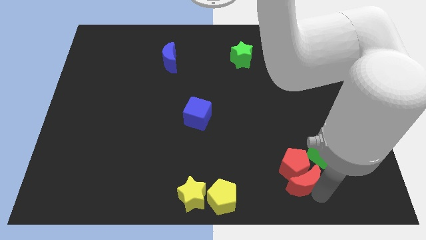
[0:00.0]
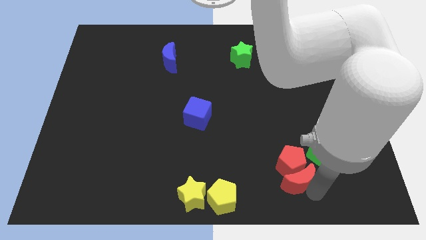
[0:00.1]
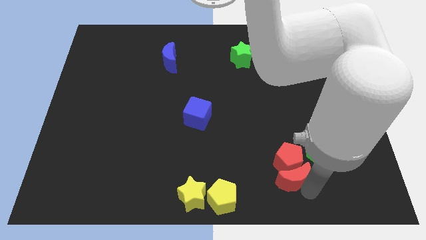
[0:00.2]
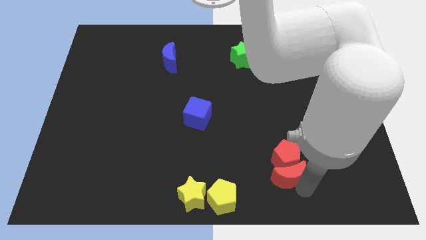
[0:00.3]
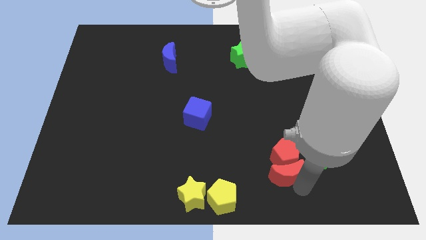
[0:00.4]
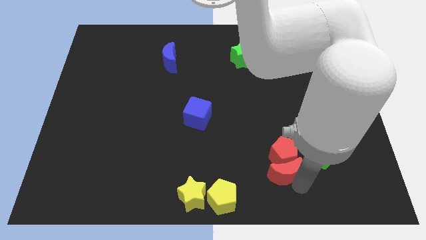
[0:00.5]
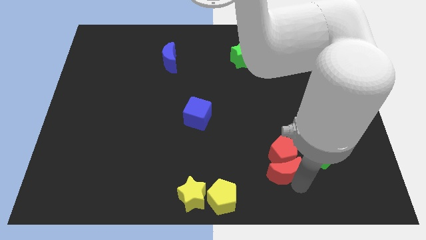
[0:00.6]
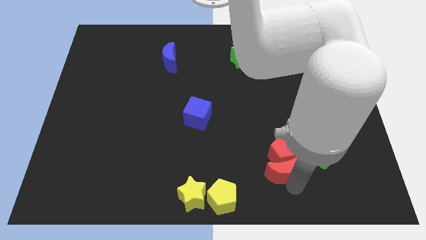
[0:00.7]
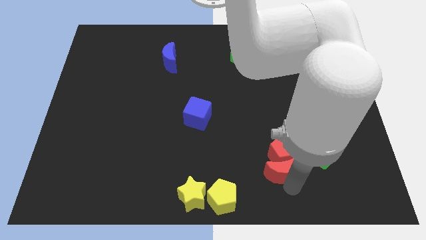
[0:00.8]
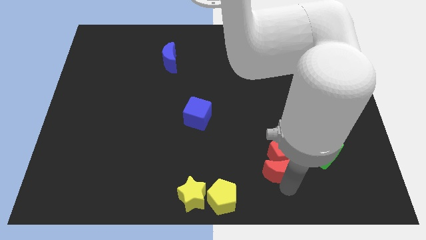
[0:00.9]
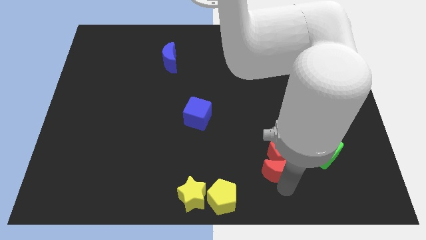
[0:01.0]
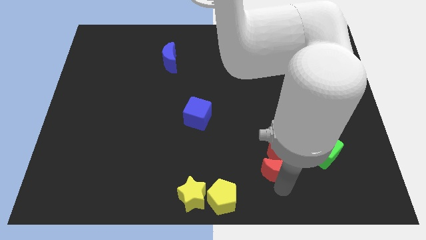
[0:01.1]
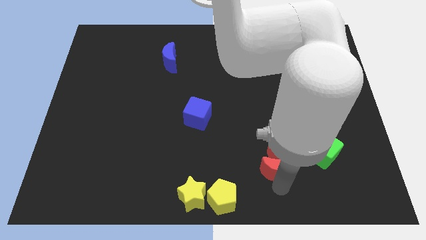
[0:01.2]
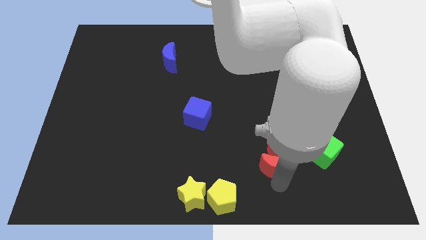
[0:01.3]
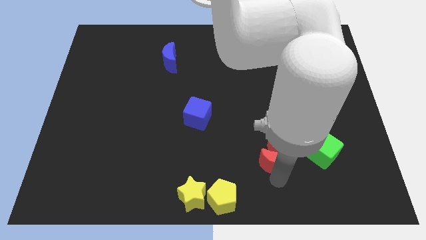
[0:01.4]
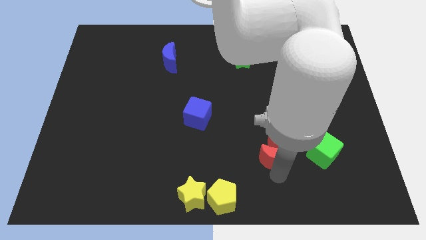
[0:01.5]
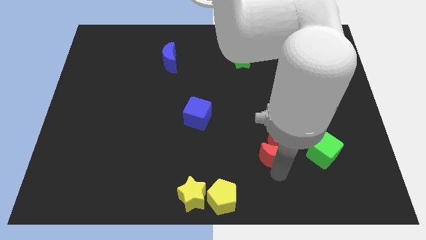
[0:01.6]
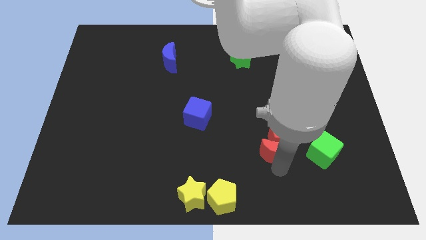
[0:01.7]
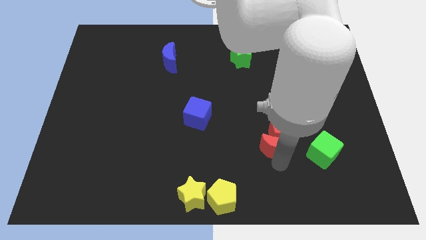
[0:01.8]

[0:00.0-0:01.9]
move the red crescent and red pentagon towards top

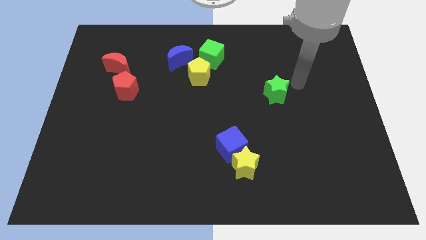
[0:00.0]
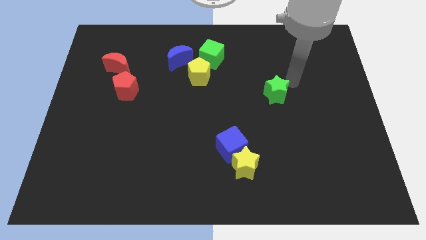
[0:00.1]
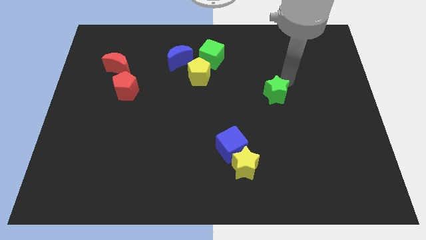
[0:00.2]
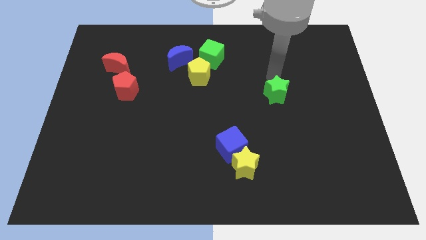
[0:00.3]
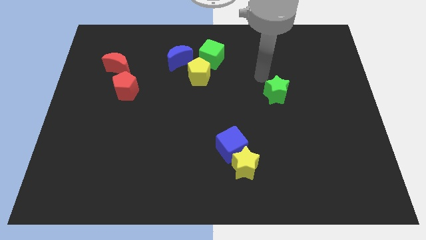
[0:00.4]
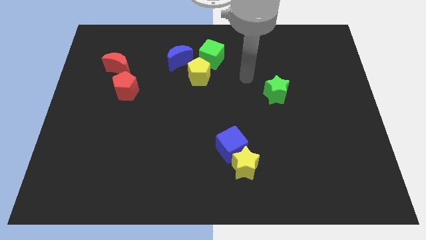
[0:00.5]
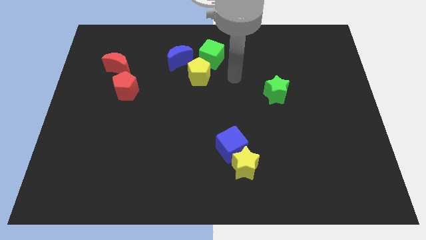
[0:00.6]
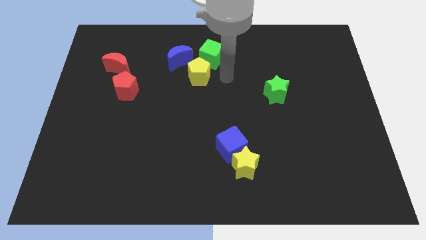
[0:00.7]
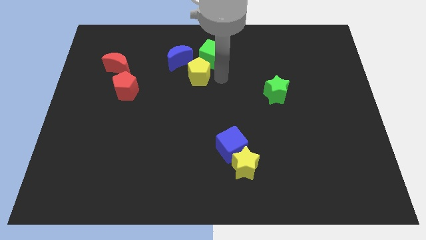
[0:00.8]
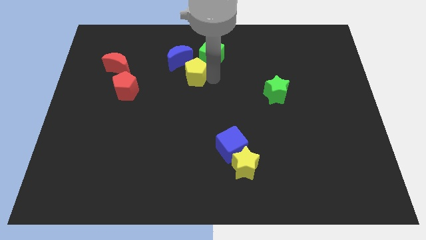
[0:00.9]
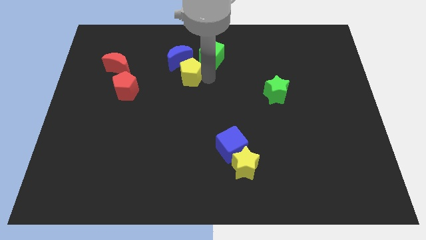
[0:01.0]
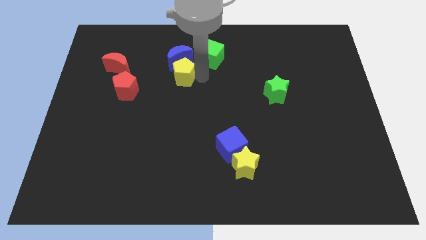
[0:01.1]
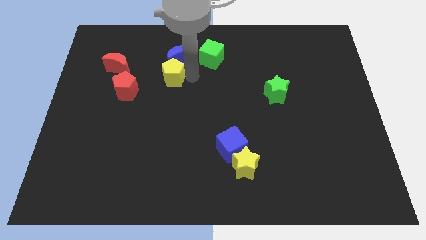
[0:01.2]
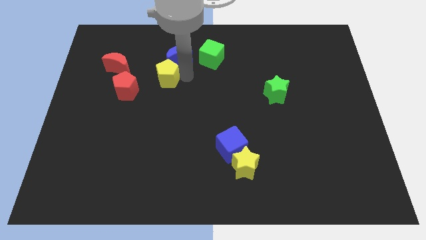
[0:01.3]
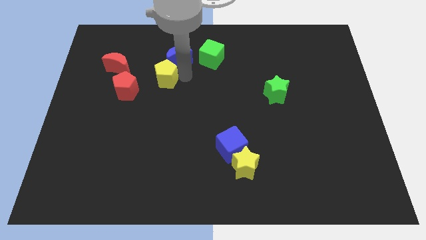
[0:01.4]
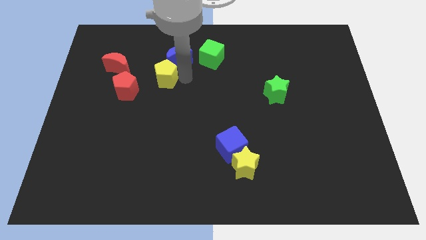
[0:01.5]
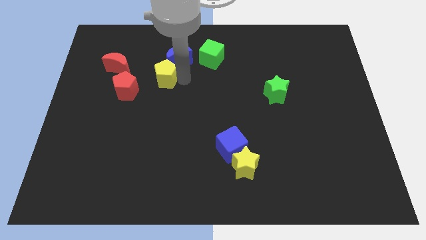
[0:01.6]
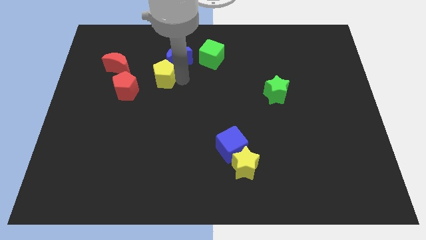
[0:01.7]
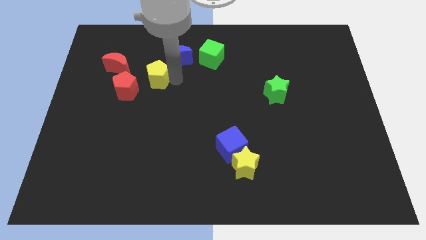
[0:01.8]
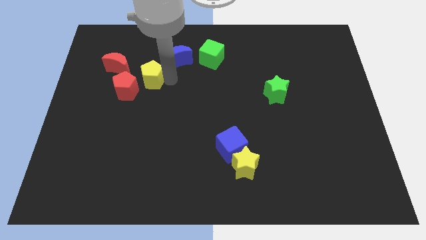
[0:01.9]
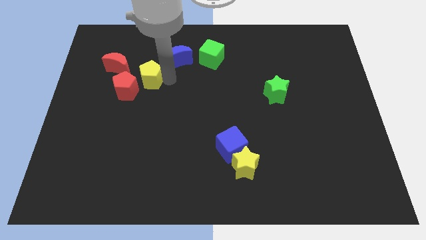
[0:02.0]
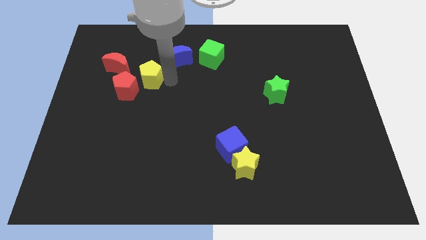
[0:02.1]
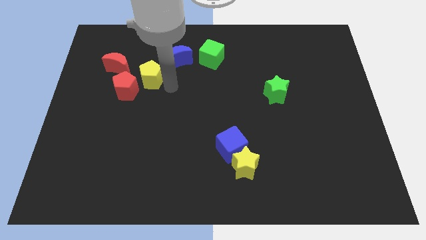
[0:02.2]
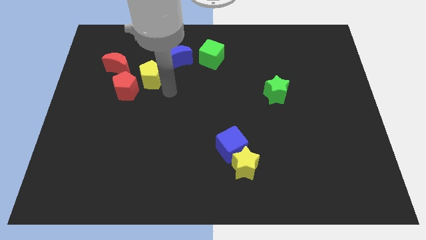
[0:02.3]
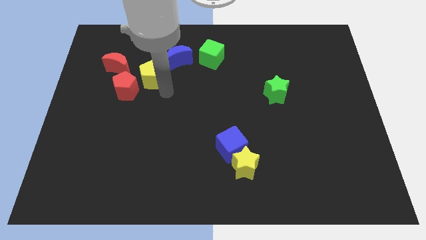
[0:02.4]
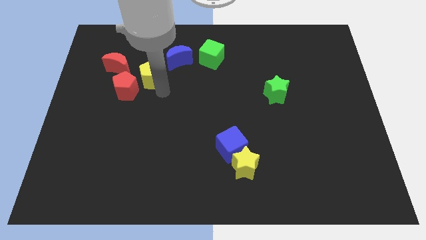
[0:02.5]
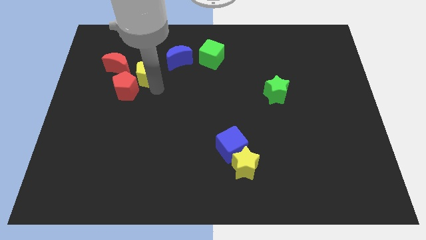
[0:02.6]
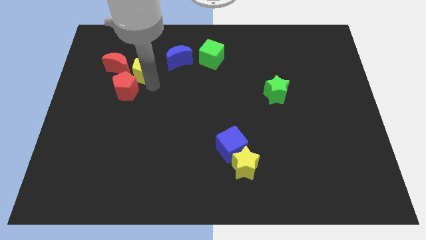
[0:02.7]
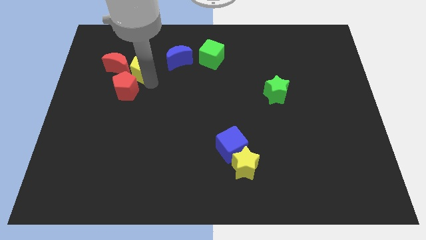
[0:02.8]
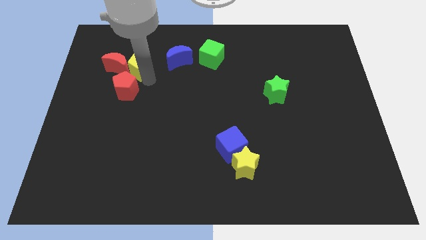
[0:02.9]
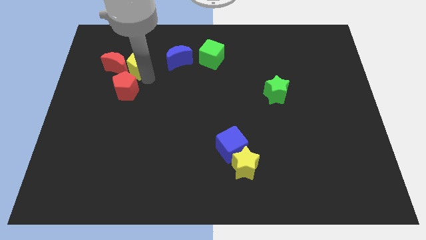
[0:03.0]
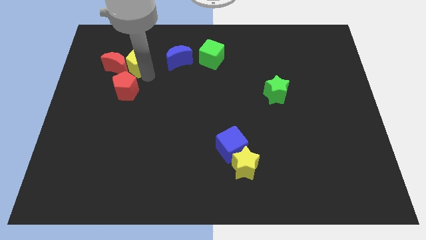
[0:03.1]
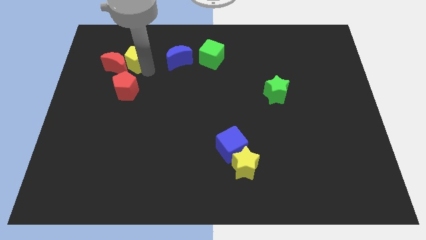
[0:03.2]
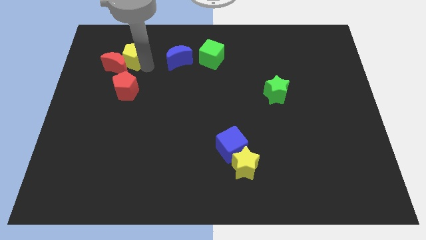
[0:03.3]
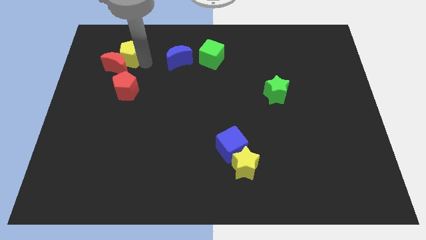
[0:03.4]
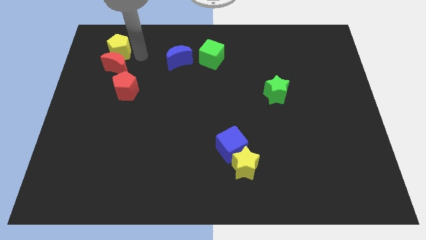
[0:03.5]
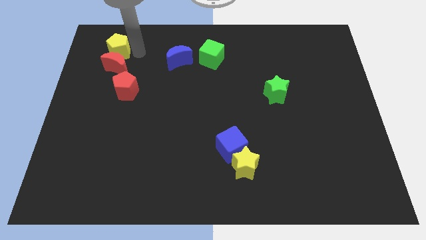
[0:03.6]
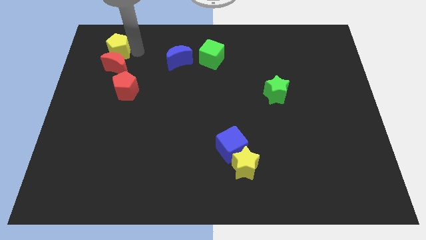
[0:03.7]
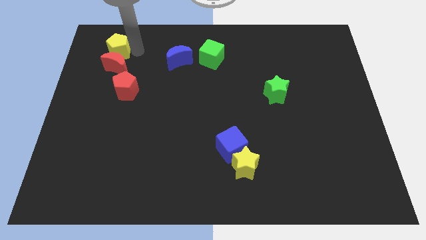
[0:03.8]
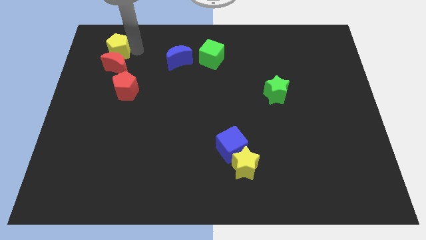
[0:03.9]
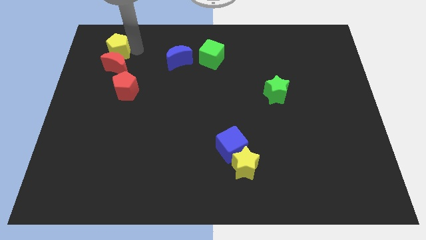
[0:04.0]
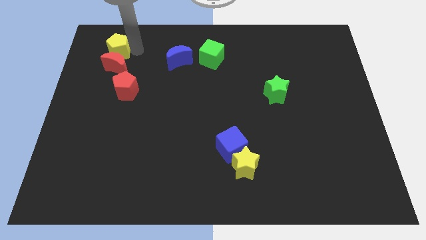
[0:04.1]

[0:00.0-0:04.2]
place yellow pentagon to the top of the red moon

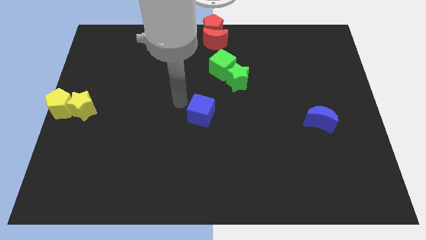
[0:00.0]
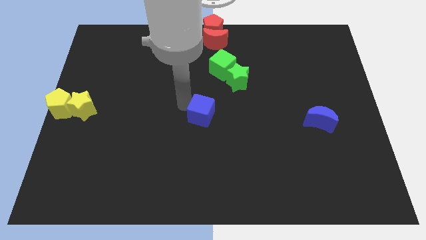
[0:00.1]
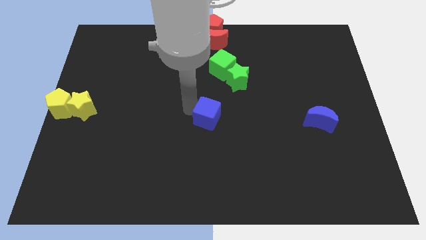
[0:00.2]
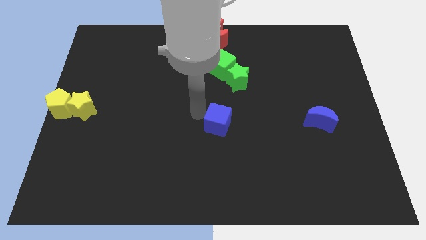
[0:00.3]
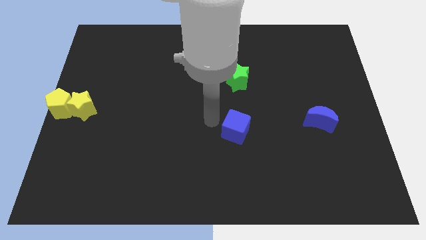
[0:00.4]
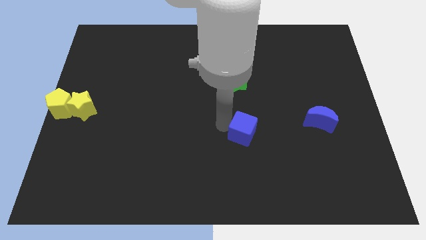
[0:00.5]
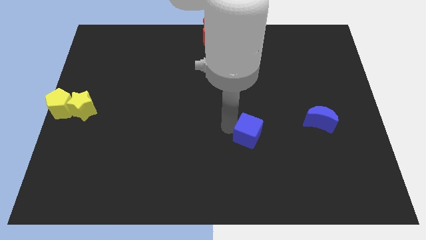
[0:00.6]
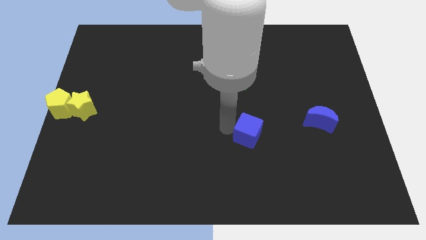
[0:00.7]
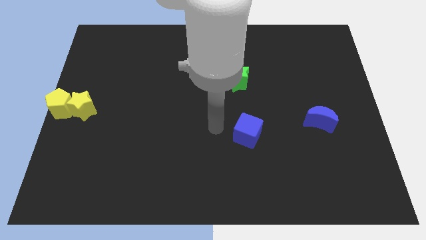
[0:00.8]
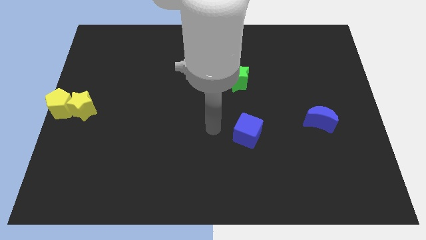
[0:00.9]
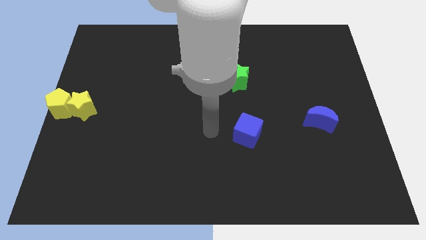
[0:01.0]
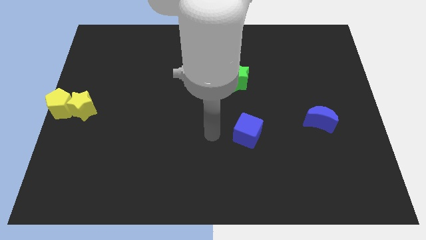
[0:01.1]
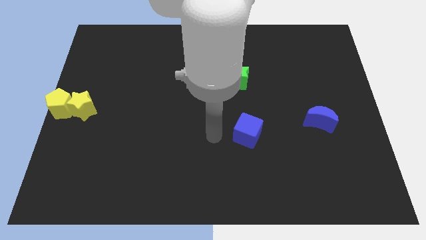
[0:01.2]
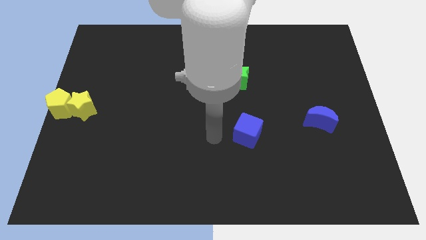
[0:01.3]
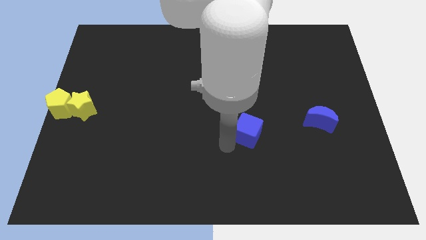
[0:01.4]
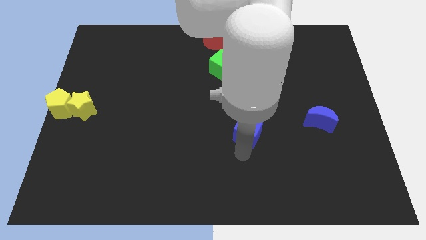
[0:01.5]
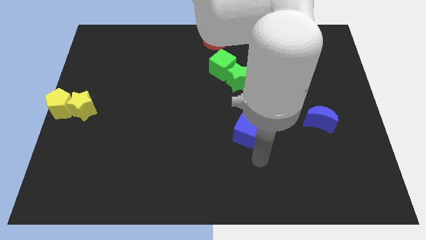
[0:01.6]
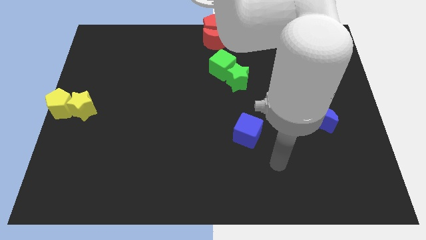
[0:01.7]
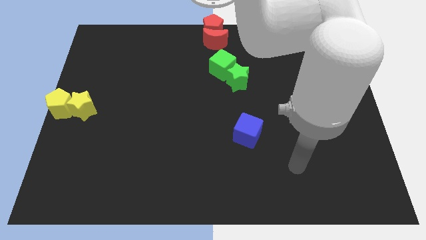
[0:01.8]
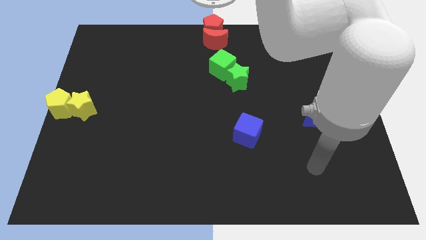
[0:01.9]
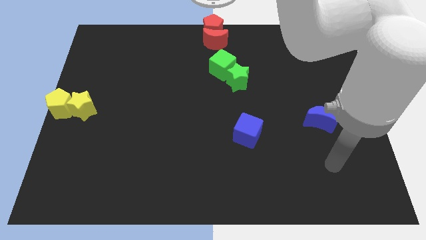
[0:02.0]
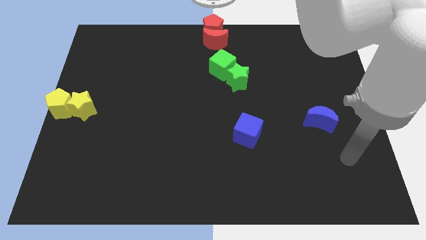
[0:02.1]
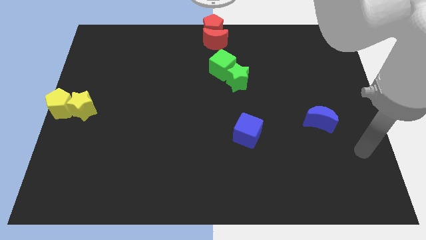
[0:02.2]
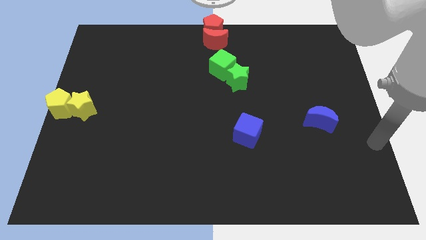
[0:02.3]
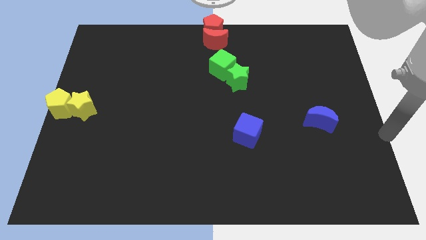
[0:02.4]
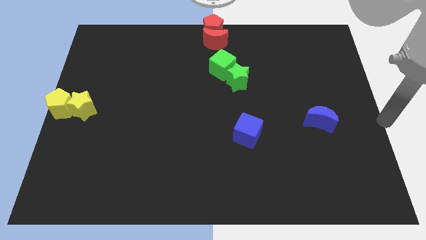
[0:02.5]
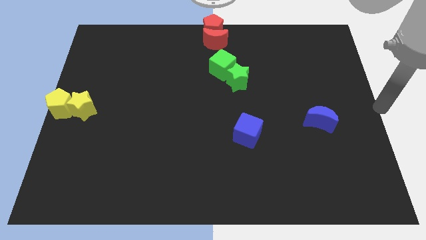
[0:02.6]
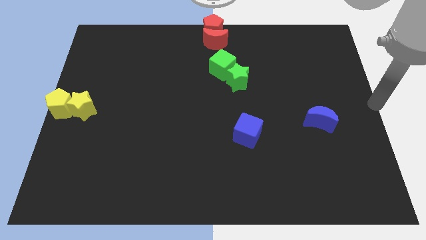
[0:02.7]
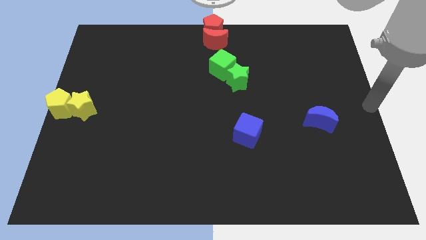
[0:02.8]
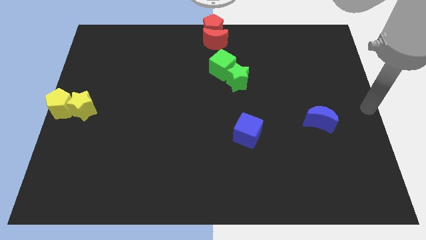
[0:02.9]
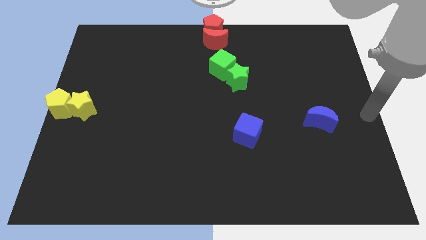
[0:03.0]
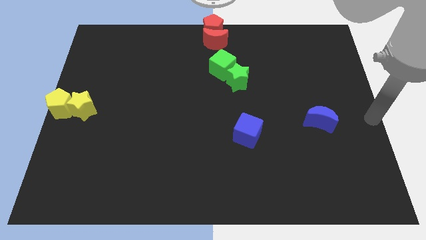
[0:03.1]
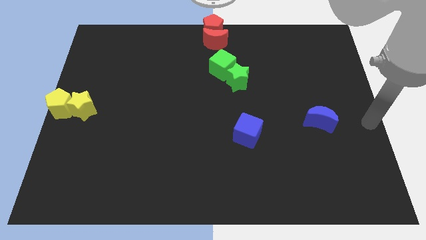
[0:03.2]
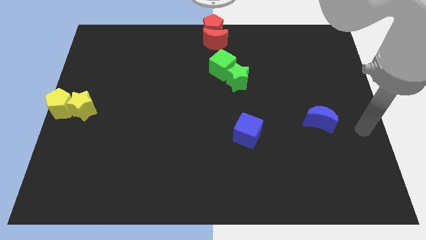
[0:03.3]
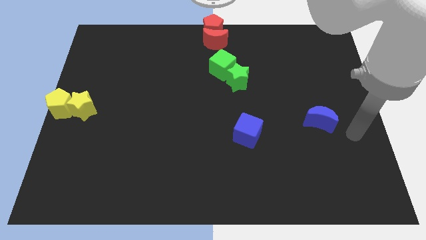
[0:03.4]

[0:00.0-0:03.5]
slightly push the blue cube towards the center right
